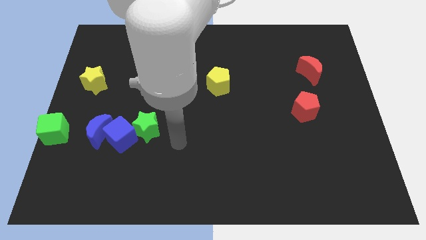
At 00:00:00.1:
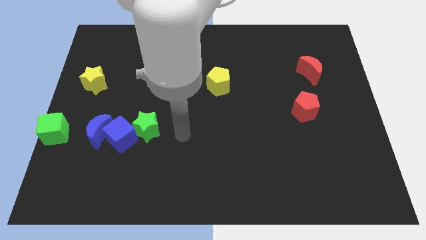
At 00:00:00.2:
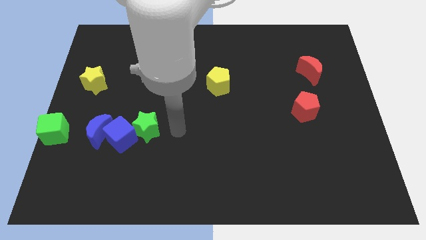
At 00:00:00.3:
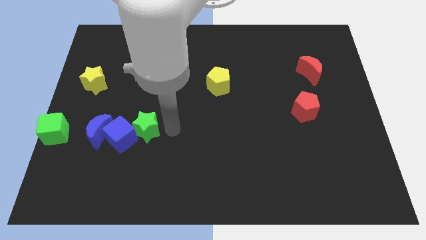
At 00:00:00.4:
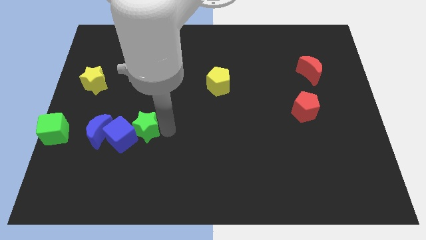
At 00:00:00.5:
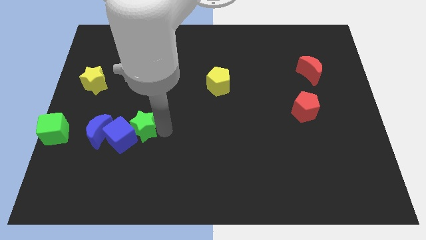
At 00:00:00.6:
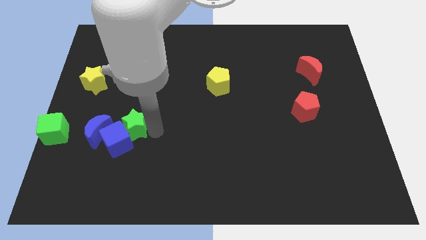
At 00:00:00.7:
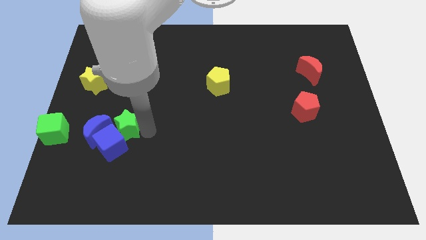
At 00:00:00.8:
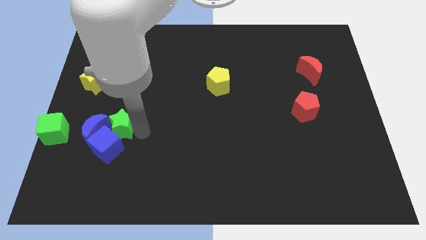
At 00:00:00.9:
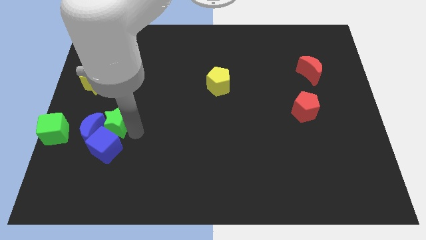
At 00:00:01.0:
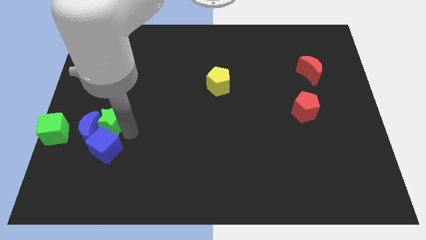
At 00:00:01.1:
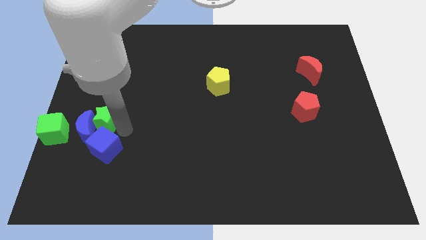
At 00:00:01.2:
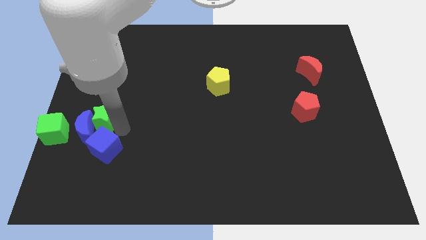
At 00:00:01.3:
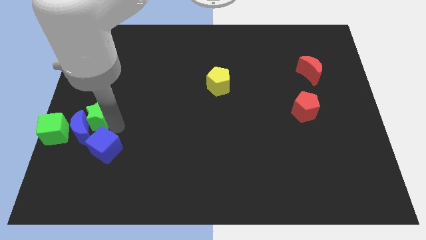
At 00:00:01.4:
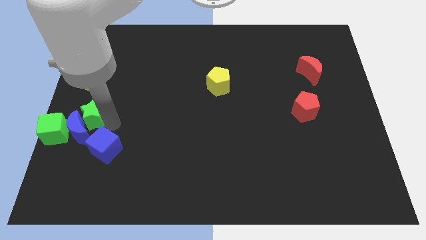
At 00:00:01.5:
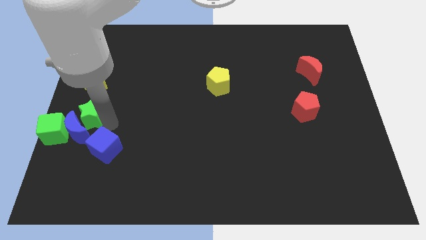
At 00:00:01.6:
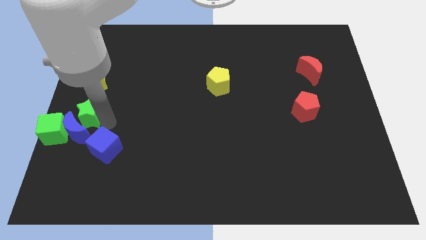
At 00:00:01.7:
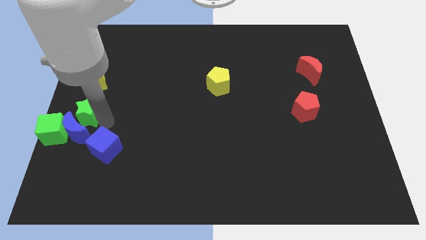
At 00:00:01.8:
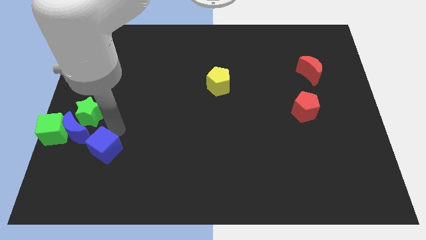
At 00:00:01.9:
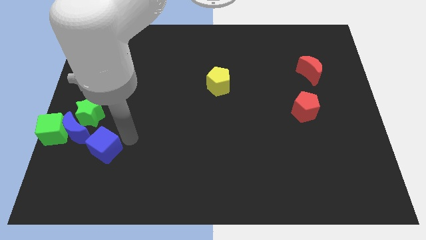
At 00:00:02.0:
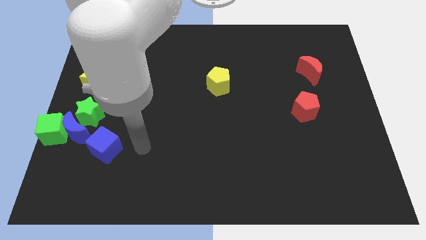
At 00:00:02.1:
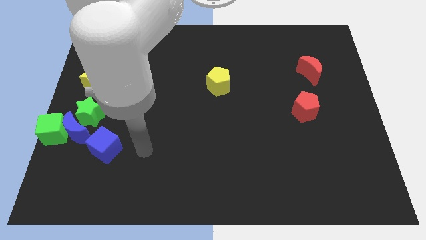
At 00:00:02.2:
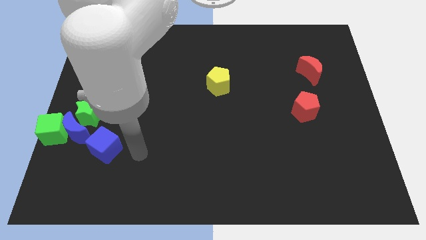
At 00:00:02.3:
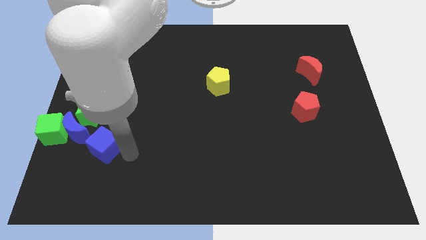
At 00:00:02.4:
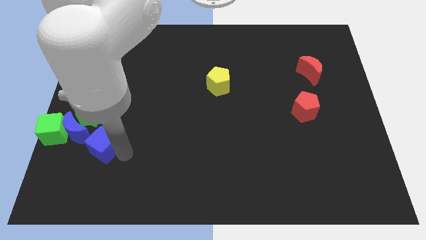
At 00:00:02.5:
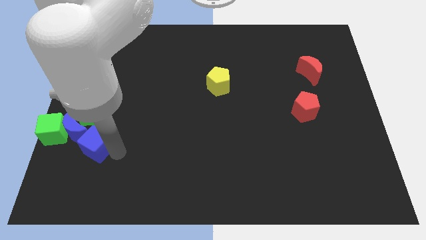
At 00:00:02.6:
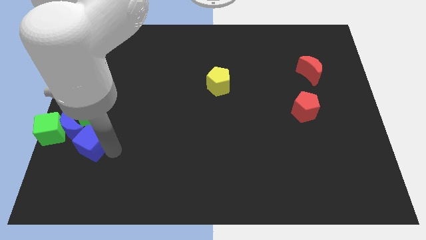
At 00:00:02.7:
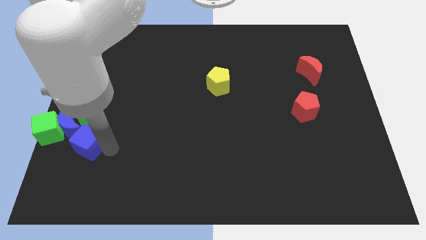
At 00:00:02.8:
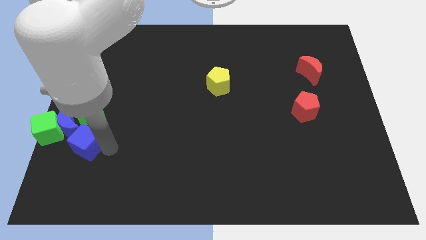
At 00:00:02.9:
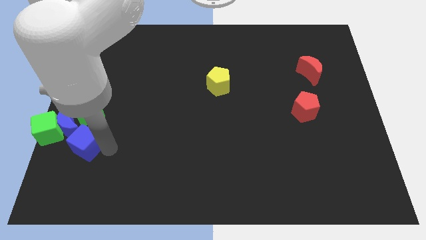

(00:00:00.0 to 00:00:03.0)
push the green star and the blue cube to the center left of the board

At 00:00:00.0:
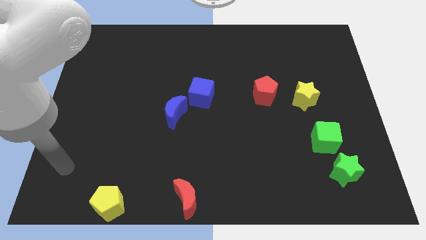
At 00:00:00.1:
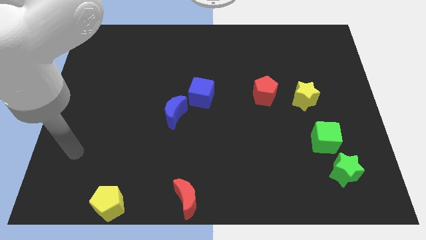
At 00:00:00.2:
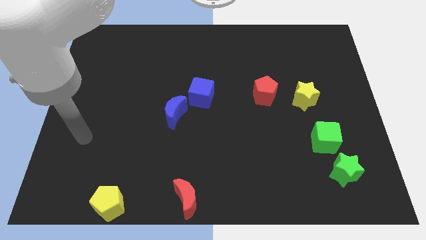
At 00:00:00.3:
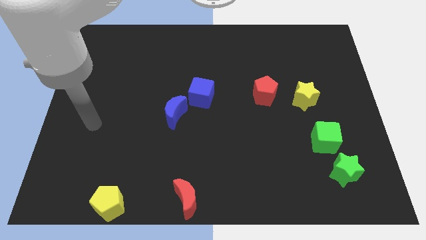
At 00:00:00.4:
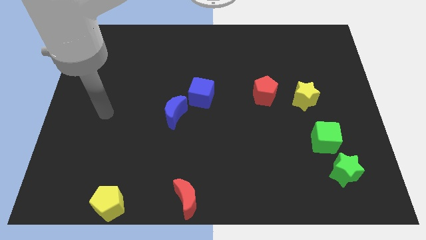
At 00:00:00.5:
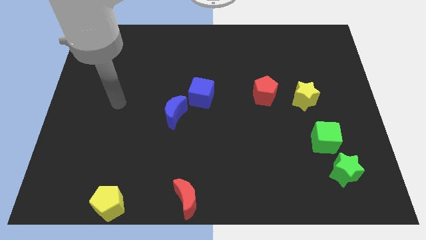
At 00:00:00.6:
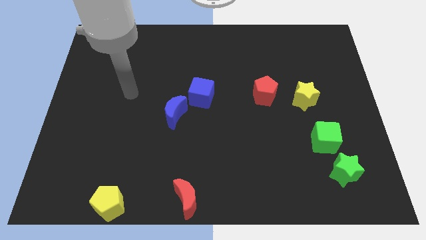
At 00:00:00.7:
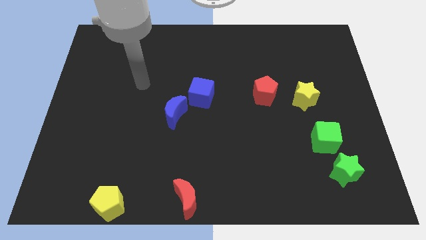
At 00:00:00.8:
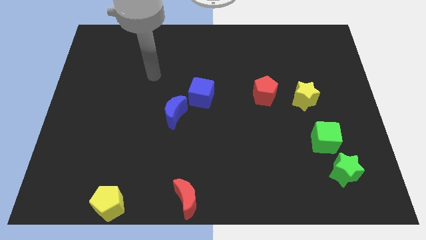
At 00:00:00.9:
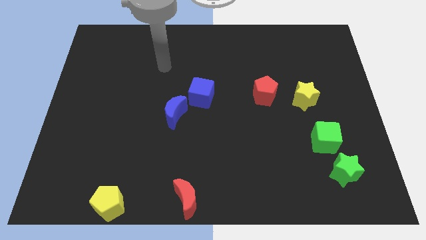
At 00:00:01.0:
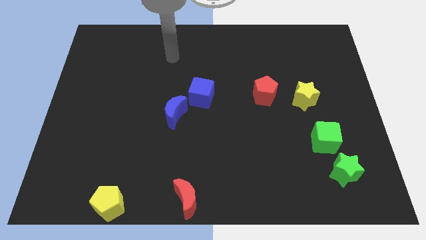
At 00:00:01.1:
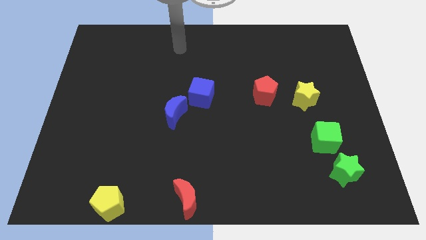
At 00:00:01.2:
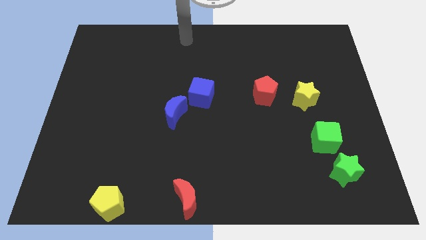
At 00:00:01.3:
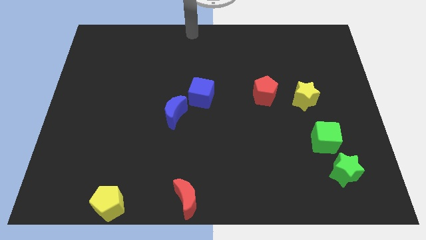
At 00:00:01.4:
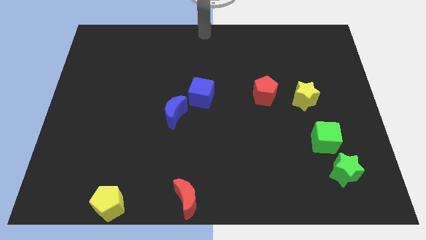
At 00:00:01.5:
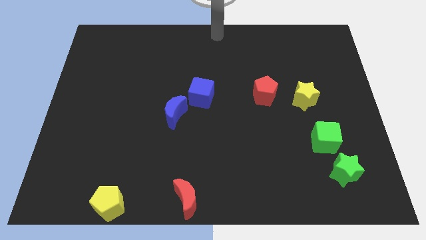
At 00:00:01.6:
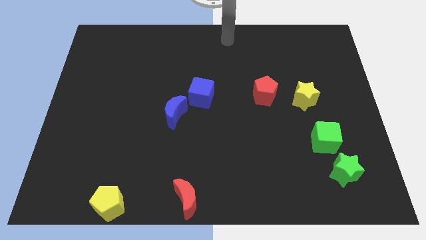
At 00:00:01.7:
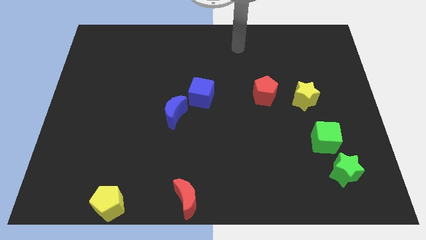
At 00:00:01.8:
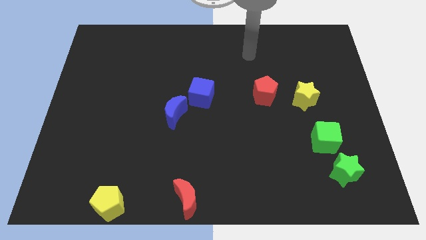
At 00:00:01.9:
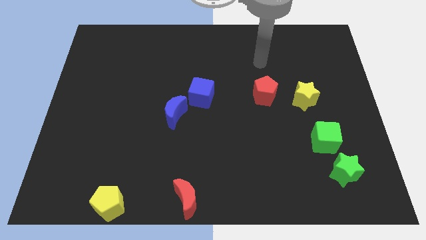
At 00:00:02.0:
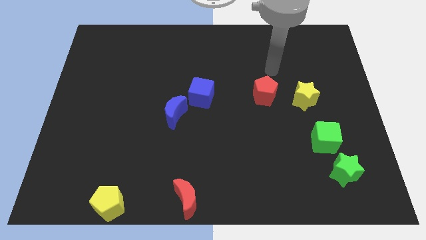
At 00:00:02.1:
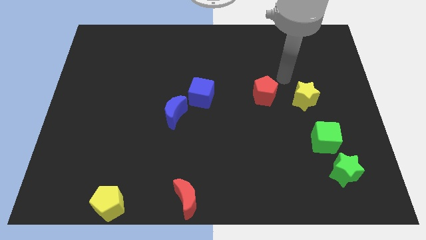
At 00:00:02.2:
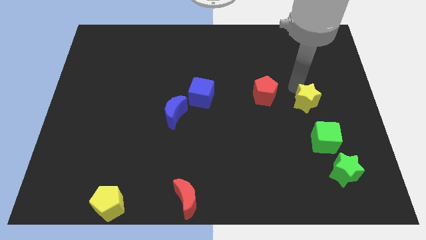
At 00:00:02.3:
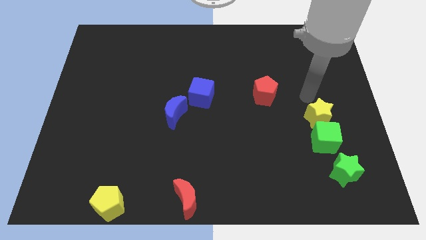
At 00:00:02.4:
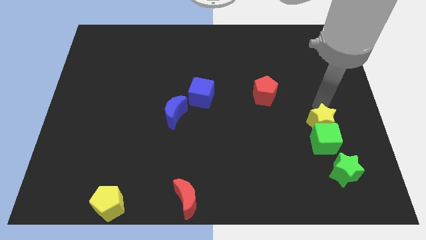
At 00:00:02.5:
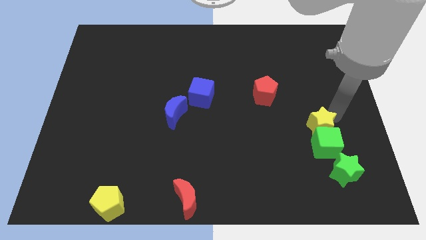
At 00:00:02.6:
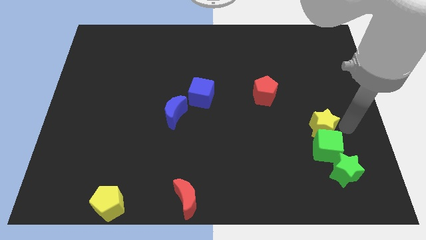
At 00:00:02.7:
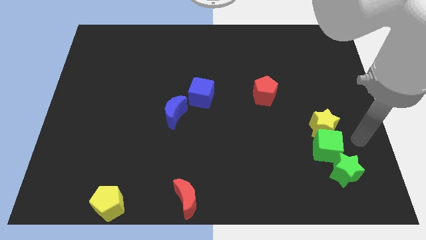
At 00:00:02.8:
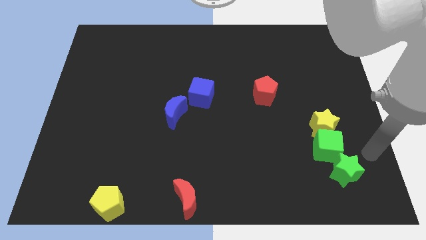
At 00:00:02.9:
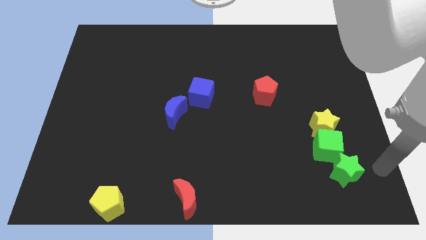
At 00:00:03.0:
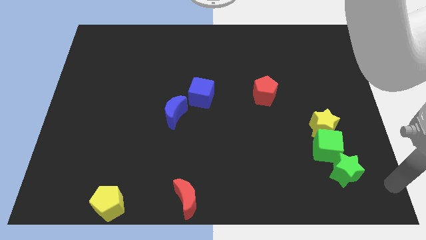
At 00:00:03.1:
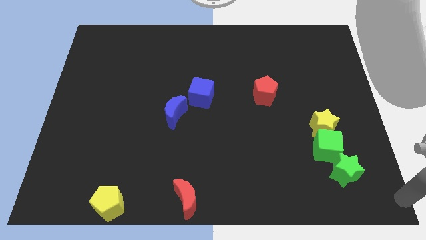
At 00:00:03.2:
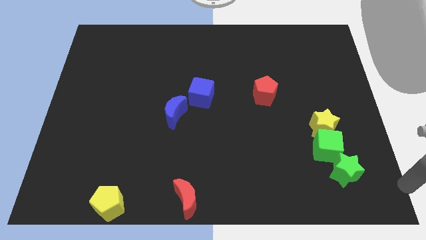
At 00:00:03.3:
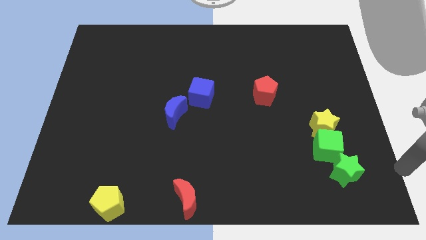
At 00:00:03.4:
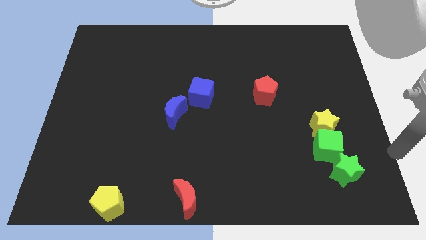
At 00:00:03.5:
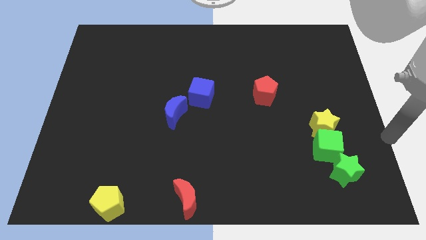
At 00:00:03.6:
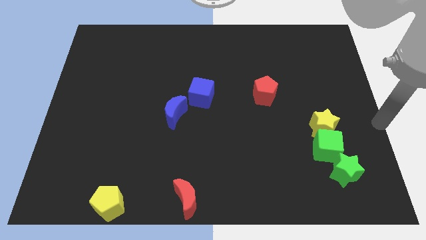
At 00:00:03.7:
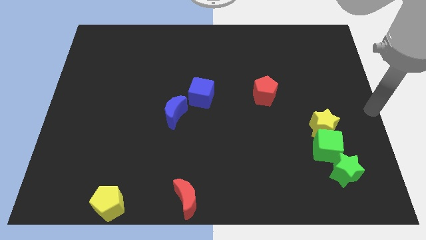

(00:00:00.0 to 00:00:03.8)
move the yellow star into the green cube

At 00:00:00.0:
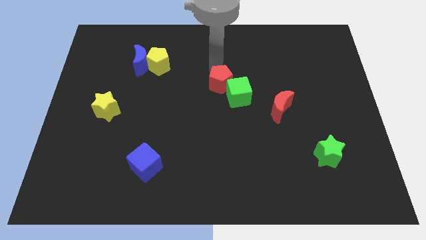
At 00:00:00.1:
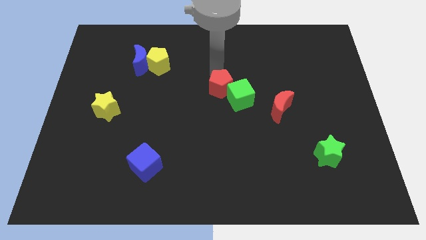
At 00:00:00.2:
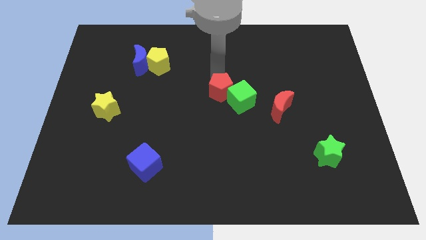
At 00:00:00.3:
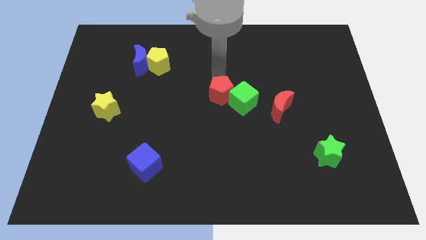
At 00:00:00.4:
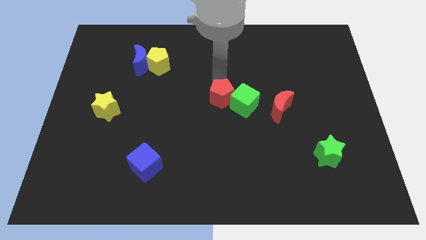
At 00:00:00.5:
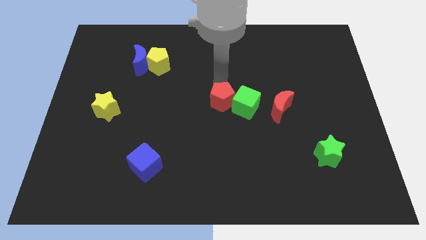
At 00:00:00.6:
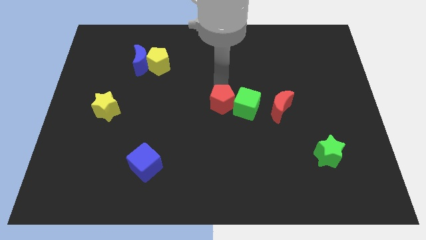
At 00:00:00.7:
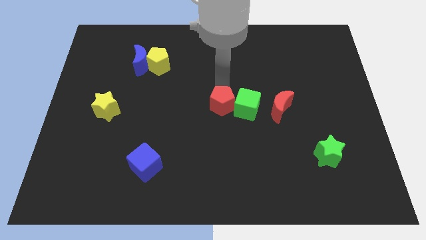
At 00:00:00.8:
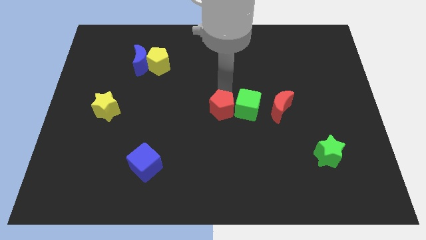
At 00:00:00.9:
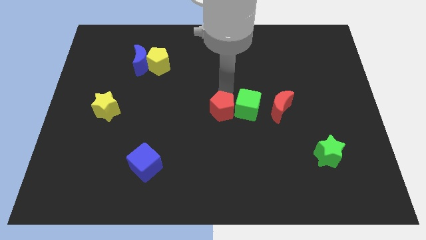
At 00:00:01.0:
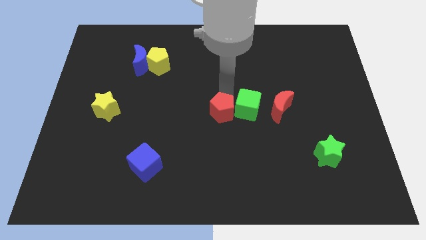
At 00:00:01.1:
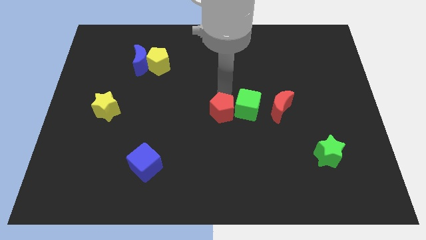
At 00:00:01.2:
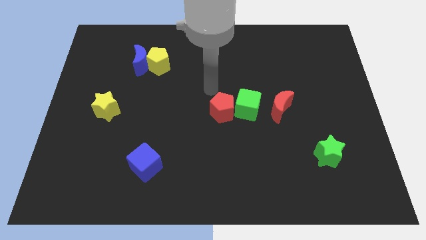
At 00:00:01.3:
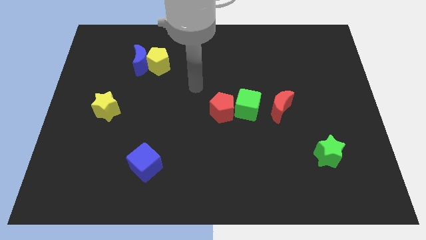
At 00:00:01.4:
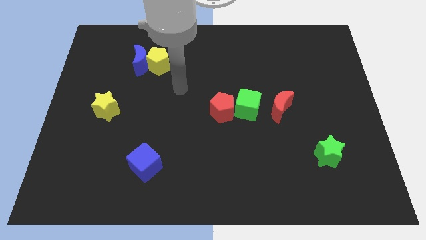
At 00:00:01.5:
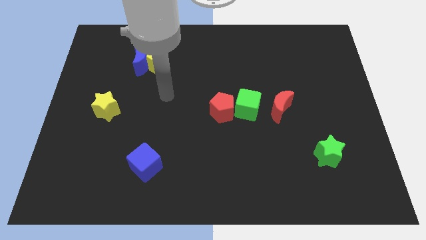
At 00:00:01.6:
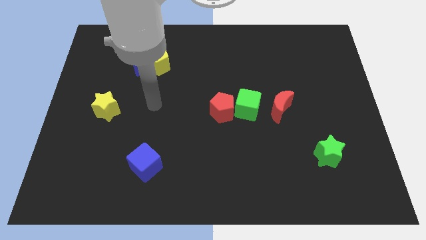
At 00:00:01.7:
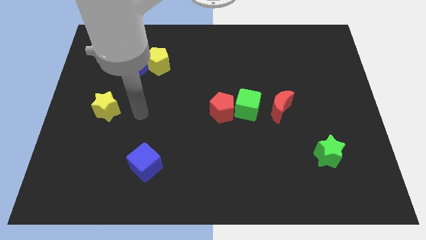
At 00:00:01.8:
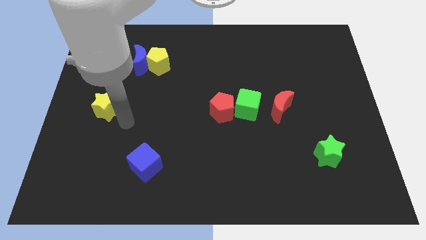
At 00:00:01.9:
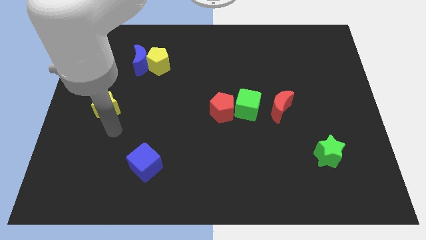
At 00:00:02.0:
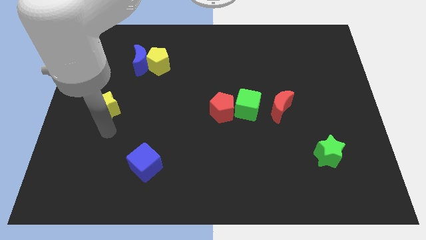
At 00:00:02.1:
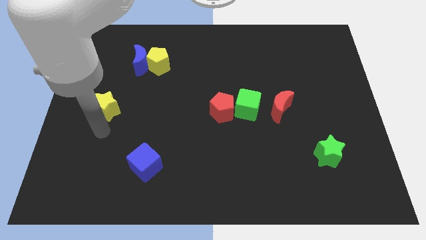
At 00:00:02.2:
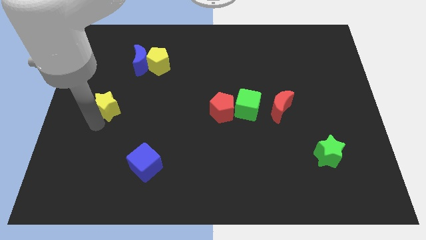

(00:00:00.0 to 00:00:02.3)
place the red pentagon to the left side of the green cube
